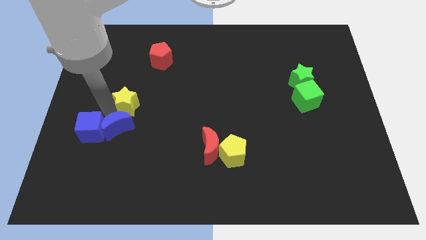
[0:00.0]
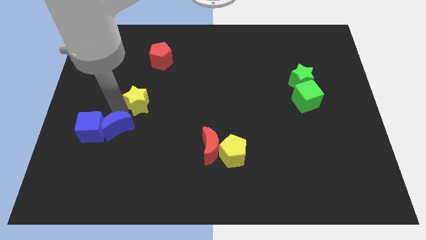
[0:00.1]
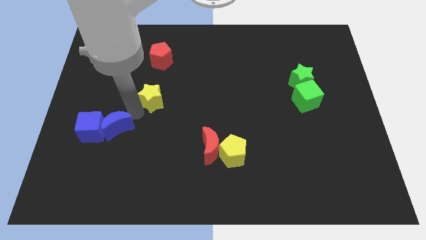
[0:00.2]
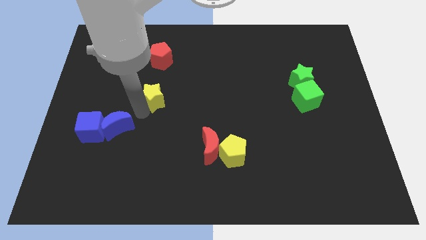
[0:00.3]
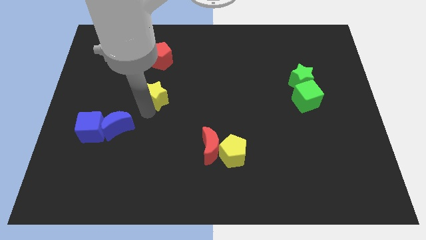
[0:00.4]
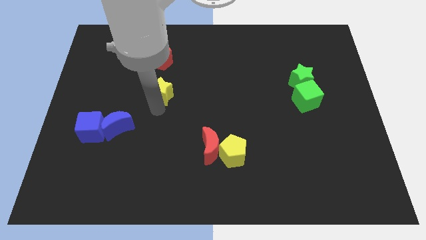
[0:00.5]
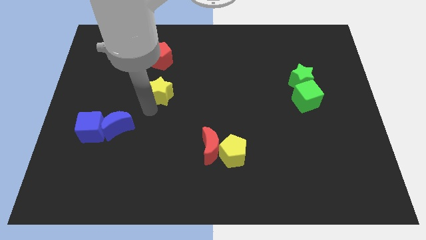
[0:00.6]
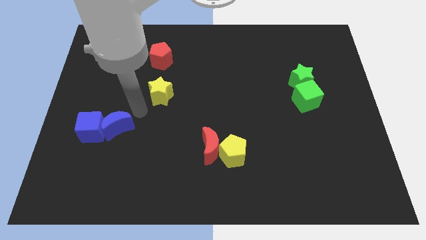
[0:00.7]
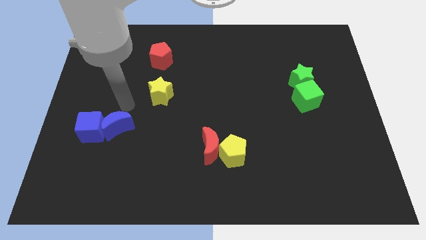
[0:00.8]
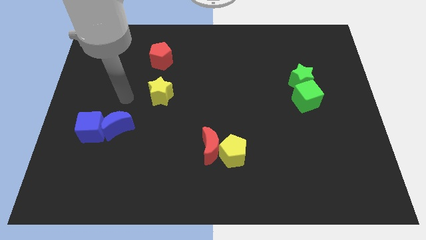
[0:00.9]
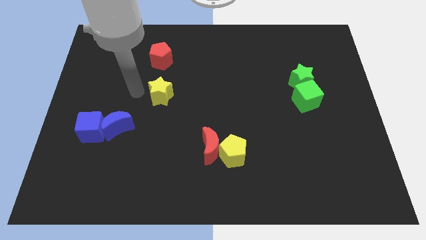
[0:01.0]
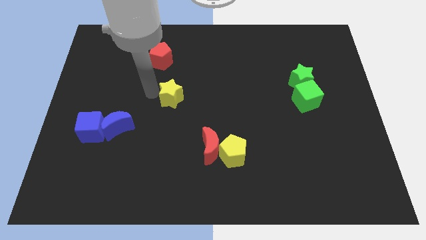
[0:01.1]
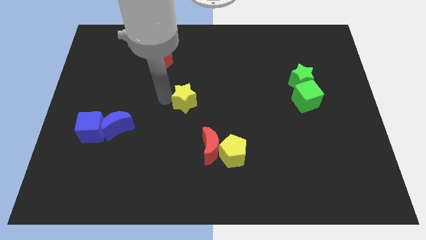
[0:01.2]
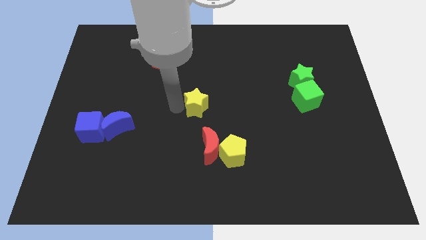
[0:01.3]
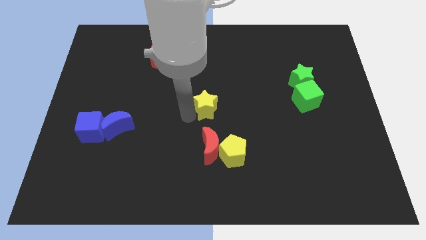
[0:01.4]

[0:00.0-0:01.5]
put the yellow star above the red moon

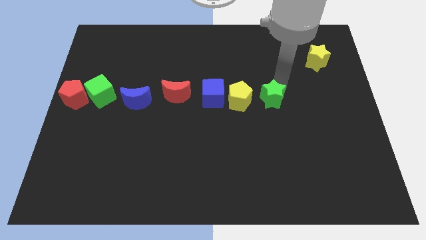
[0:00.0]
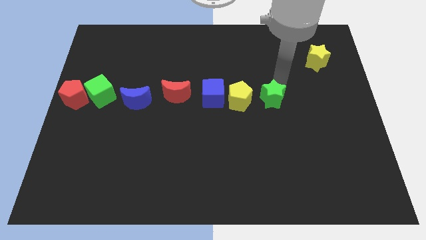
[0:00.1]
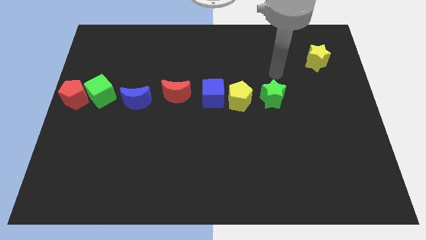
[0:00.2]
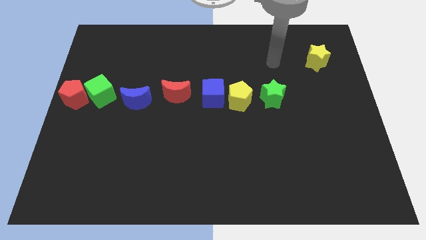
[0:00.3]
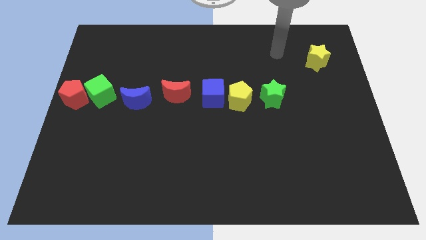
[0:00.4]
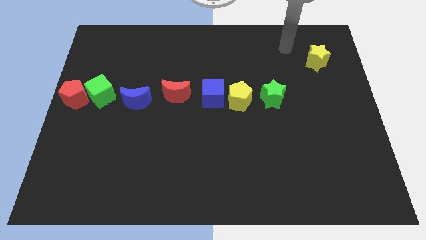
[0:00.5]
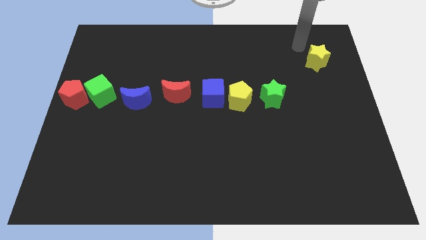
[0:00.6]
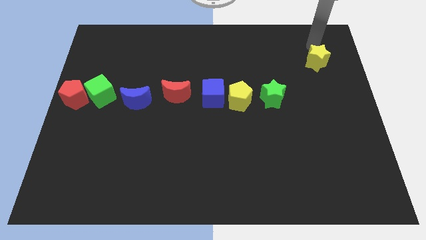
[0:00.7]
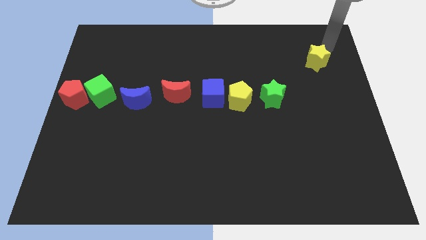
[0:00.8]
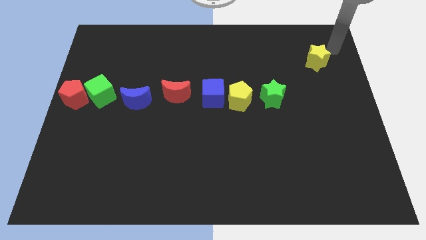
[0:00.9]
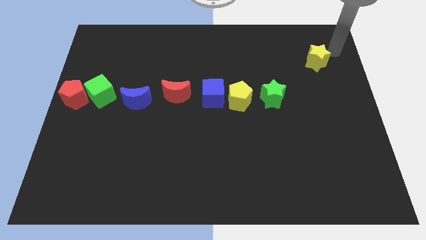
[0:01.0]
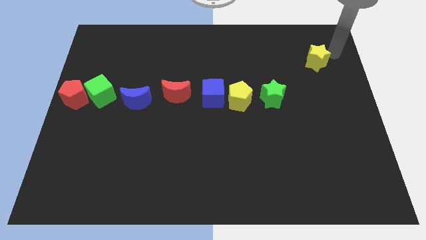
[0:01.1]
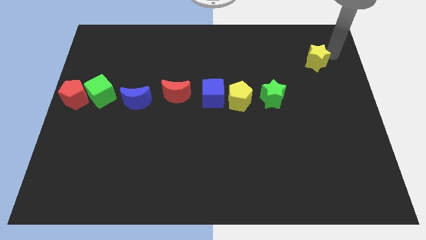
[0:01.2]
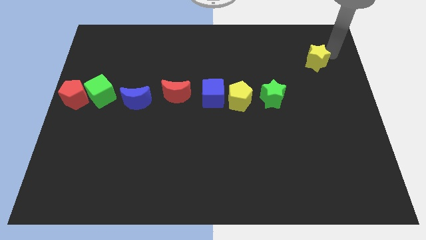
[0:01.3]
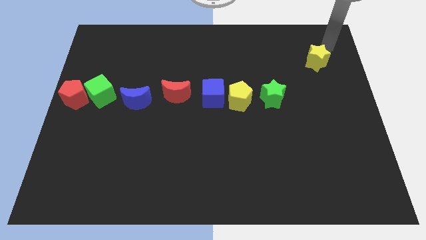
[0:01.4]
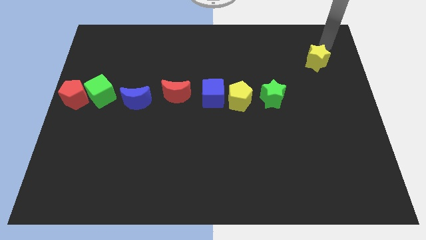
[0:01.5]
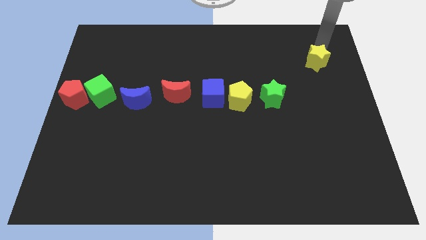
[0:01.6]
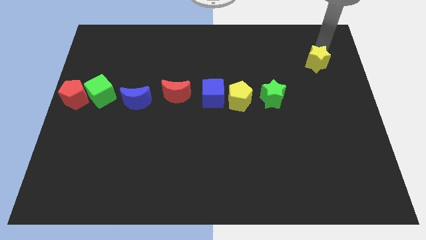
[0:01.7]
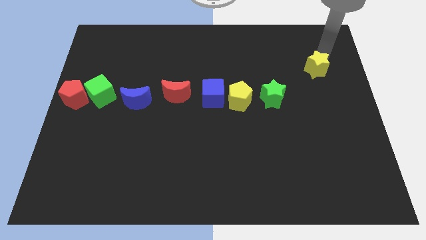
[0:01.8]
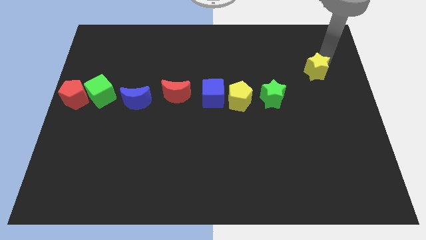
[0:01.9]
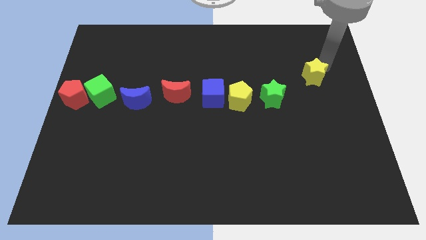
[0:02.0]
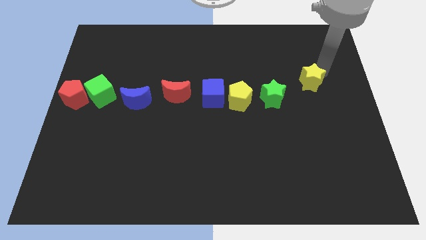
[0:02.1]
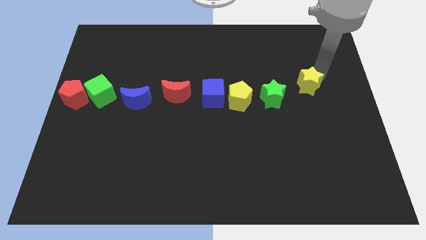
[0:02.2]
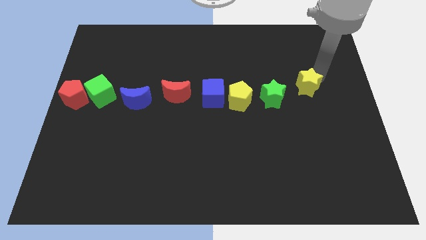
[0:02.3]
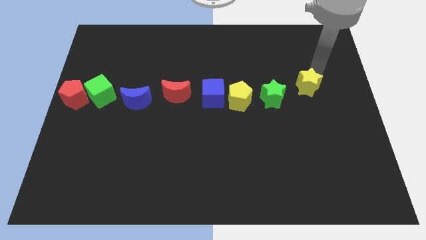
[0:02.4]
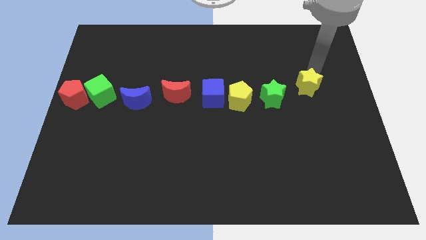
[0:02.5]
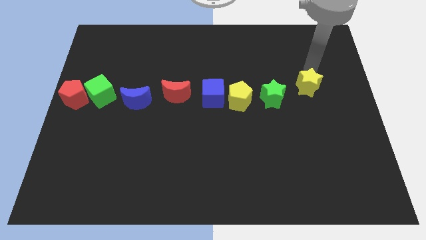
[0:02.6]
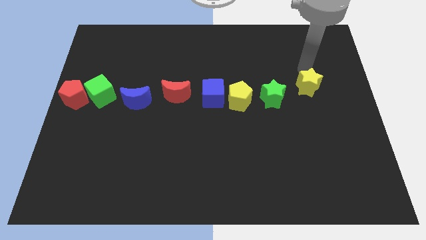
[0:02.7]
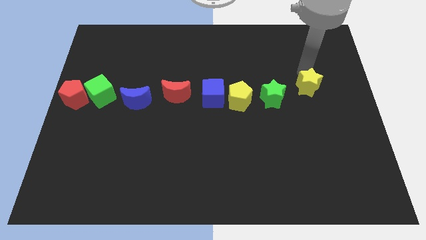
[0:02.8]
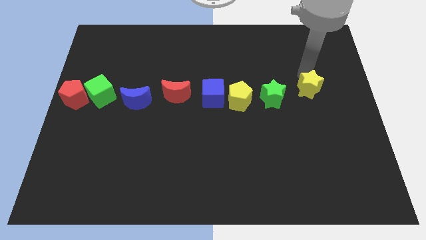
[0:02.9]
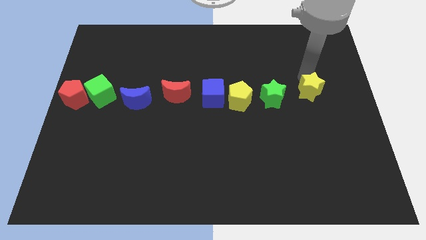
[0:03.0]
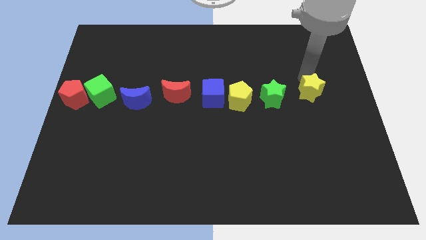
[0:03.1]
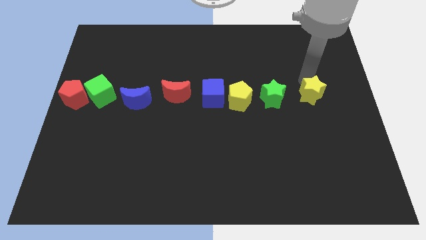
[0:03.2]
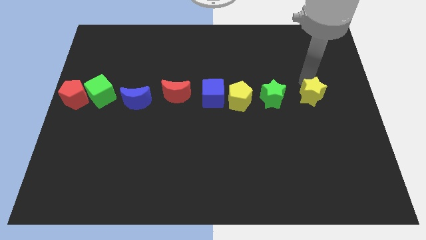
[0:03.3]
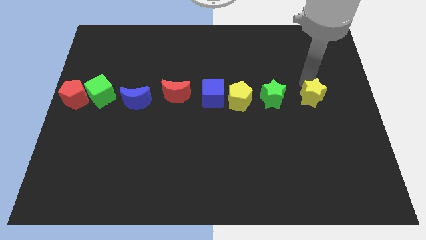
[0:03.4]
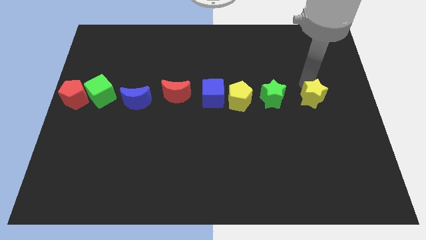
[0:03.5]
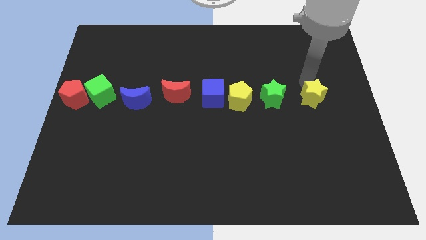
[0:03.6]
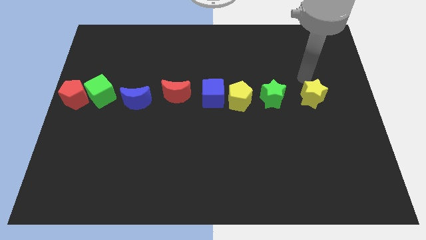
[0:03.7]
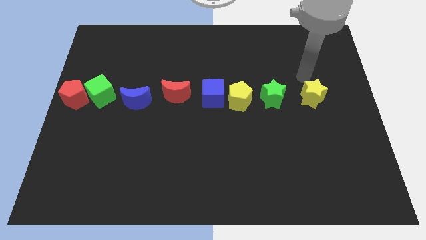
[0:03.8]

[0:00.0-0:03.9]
place the yellow star to the right side of the yellow star

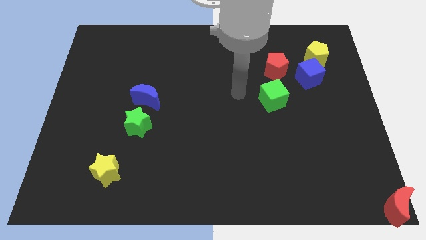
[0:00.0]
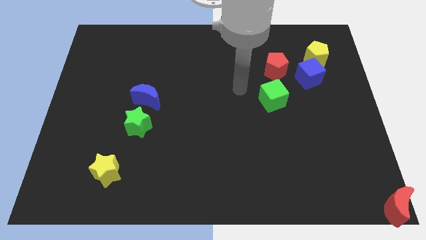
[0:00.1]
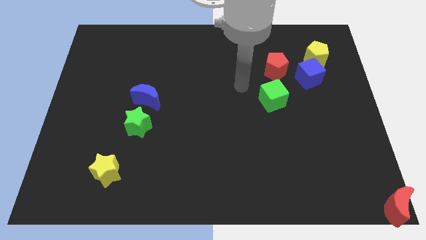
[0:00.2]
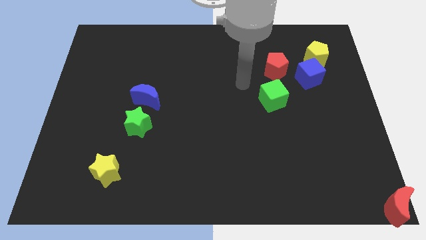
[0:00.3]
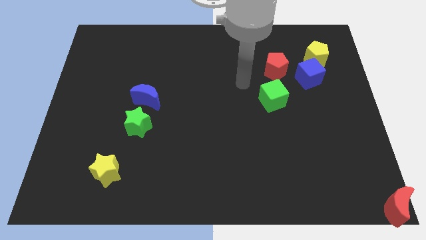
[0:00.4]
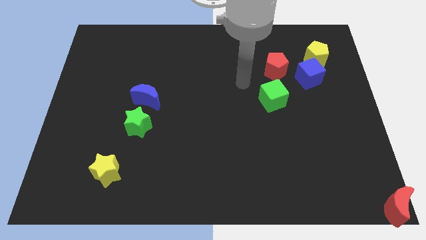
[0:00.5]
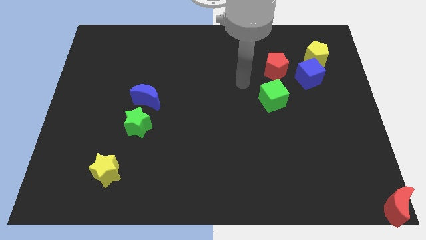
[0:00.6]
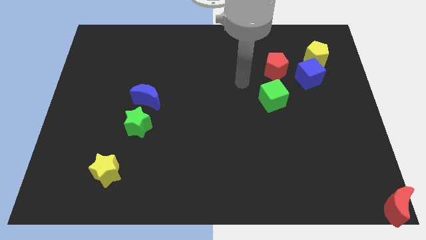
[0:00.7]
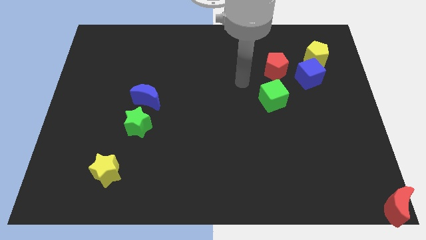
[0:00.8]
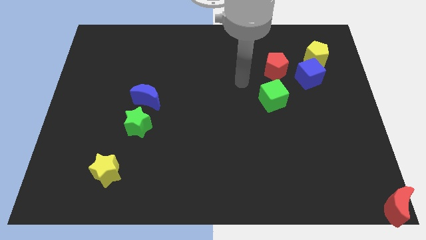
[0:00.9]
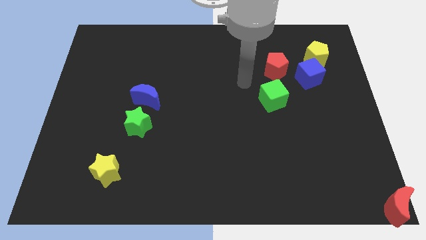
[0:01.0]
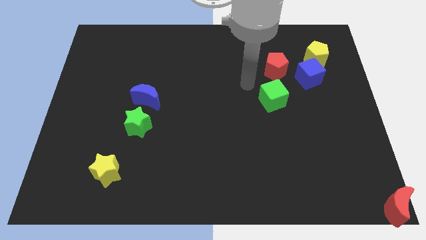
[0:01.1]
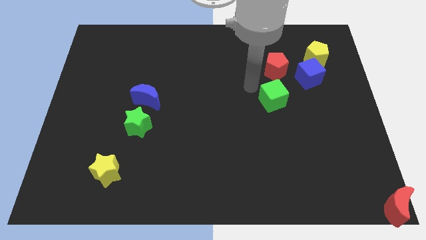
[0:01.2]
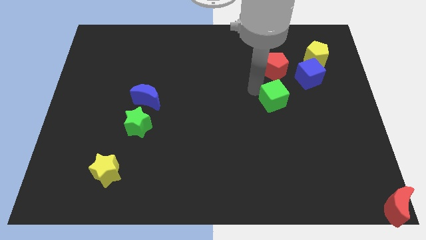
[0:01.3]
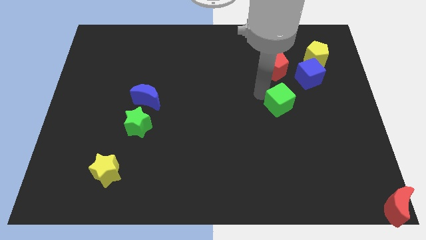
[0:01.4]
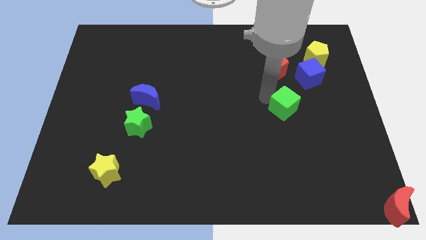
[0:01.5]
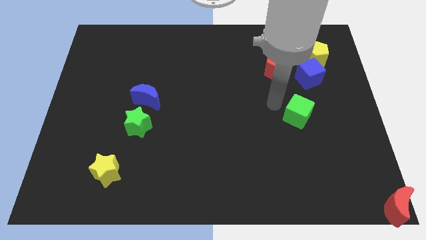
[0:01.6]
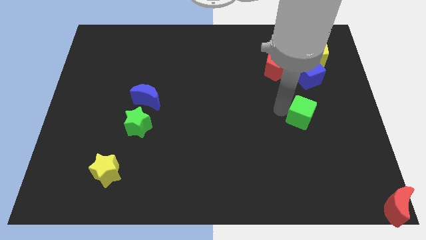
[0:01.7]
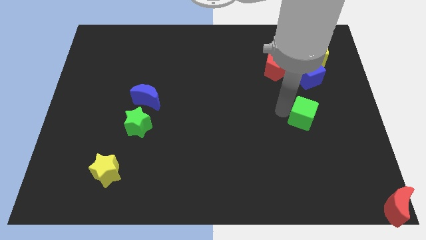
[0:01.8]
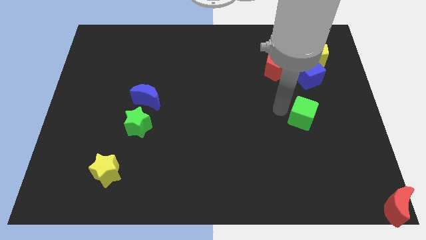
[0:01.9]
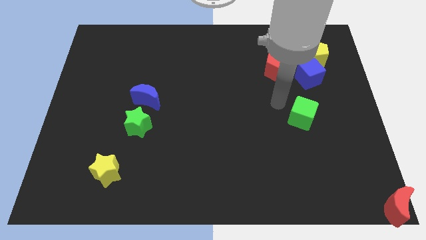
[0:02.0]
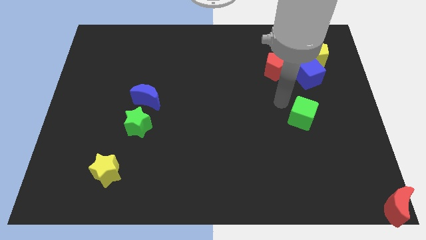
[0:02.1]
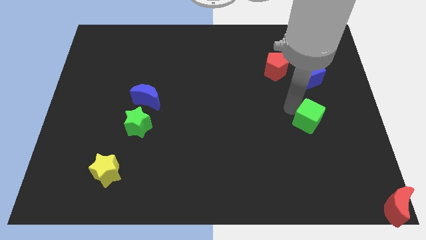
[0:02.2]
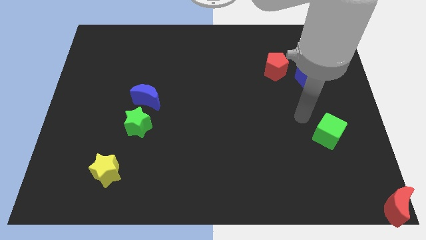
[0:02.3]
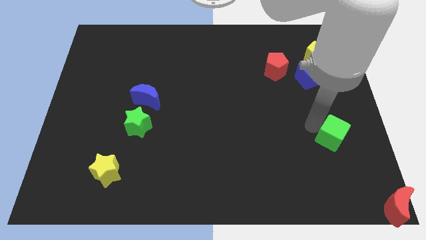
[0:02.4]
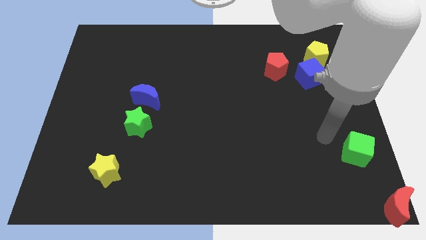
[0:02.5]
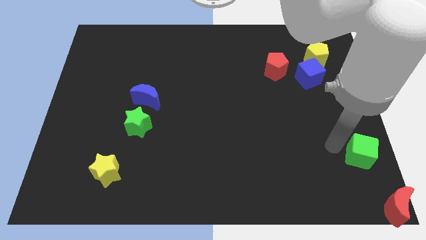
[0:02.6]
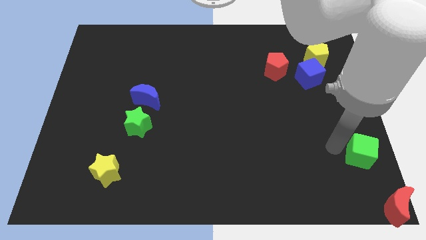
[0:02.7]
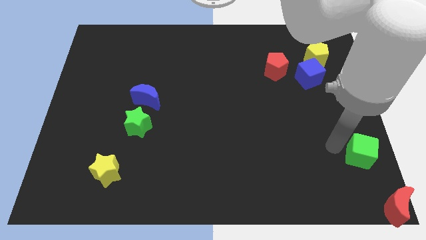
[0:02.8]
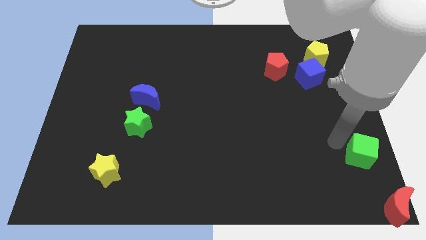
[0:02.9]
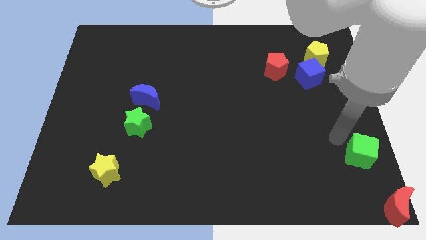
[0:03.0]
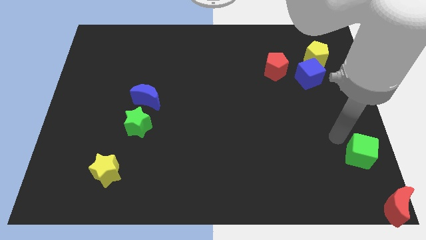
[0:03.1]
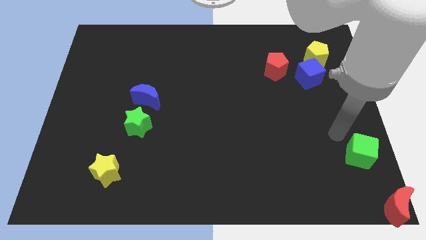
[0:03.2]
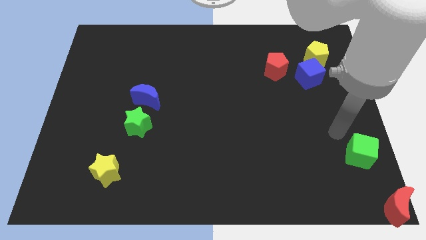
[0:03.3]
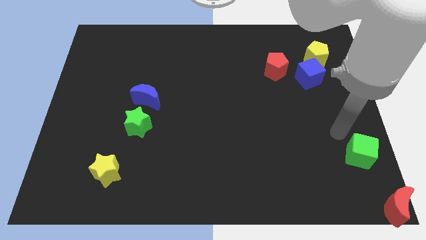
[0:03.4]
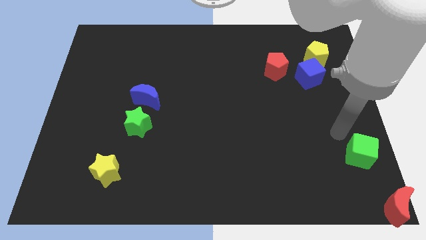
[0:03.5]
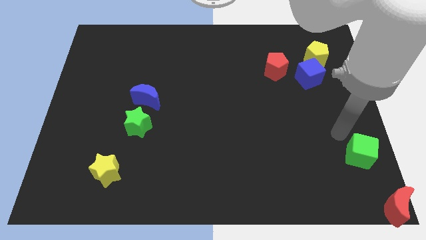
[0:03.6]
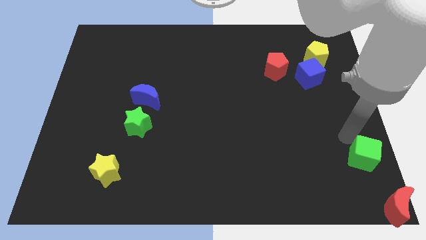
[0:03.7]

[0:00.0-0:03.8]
push the green cube towards the red moon

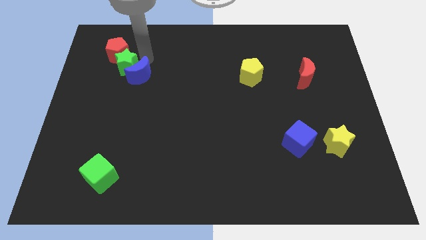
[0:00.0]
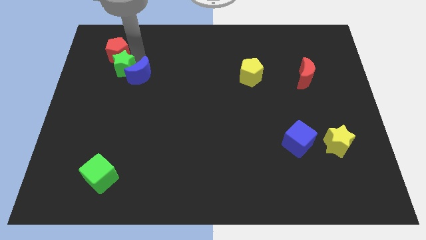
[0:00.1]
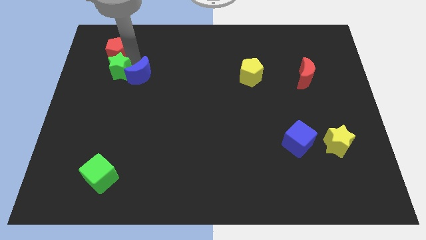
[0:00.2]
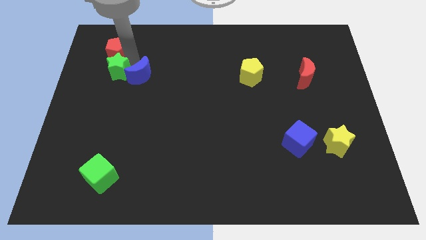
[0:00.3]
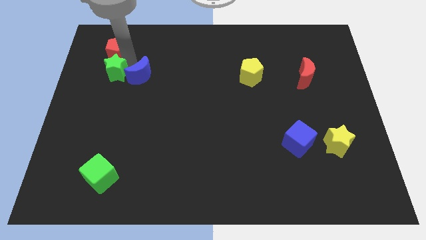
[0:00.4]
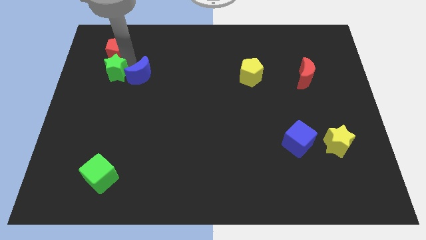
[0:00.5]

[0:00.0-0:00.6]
place the green star in between blue crescent and red pentagon
